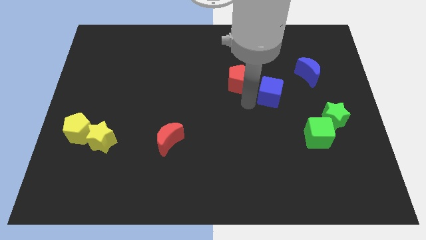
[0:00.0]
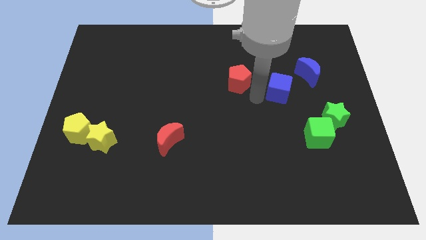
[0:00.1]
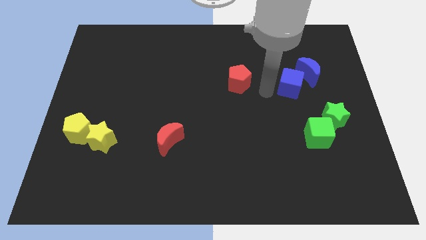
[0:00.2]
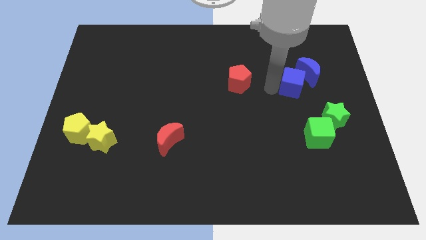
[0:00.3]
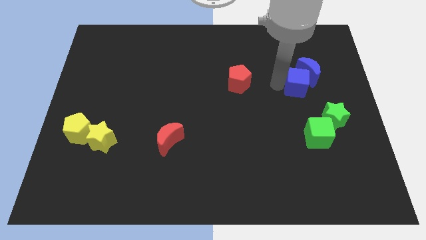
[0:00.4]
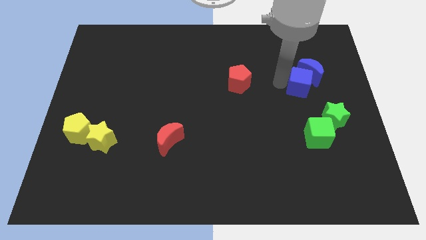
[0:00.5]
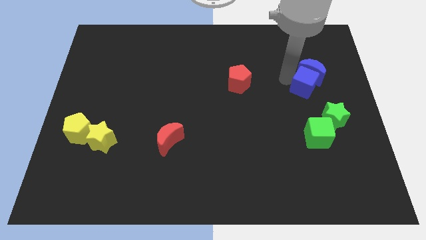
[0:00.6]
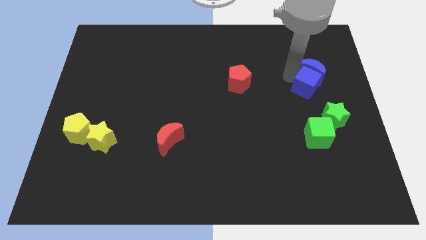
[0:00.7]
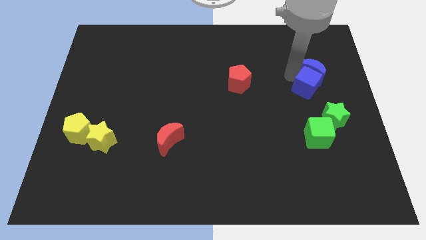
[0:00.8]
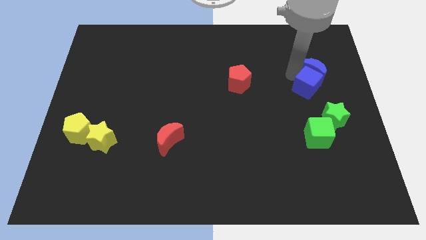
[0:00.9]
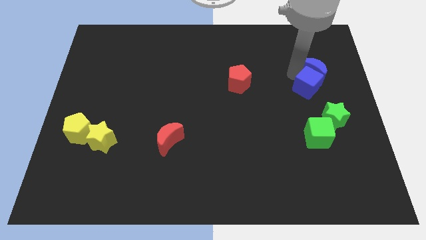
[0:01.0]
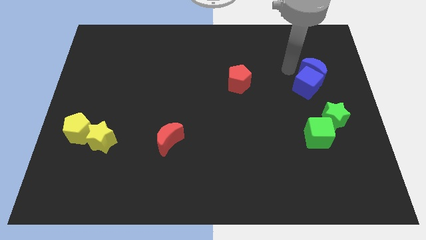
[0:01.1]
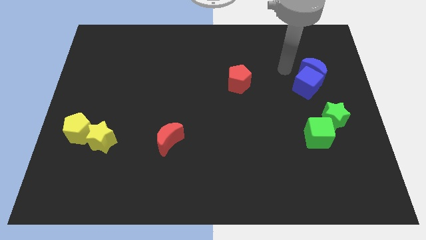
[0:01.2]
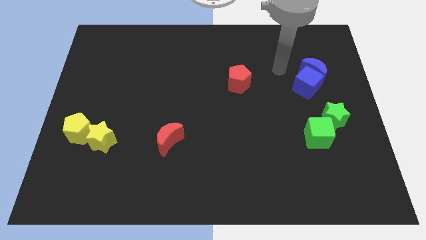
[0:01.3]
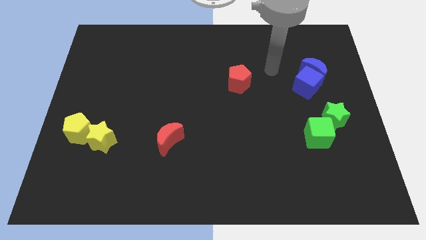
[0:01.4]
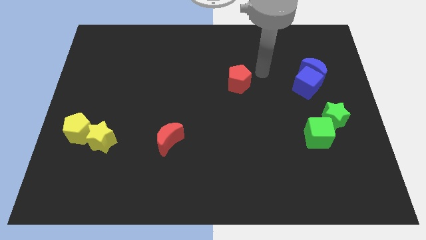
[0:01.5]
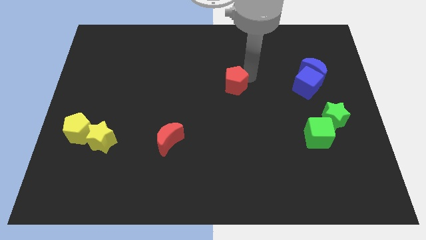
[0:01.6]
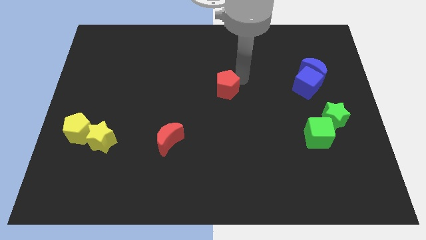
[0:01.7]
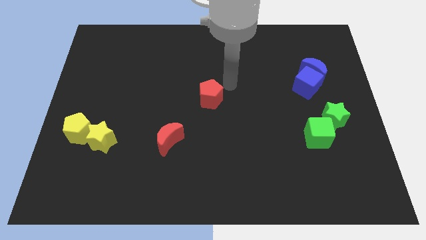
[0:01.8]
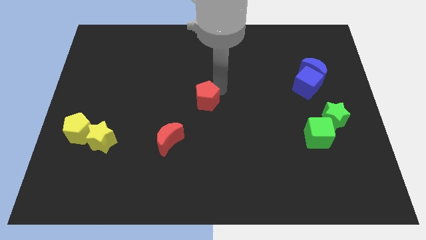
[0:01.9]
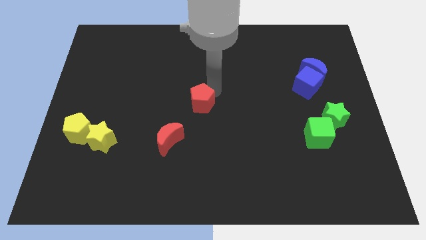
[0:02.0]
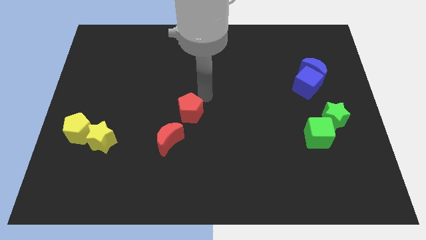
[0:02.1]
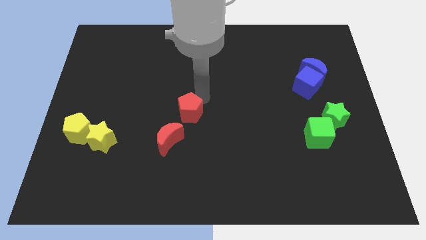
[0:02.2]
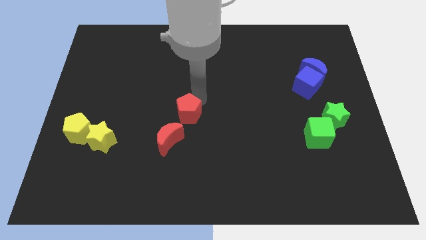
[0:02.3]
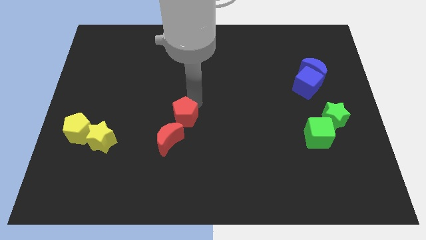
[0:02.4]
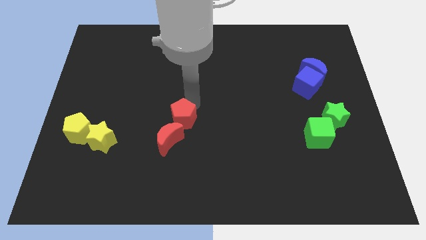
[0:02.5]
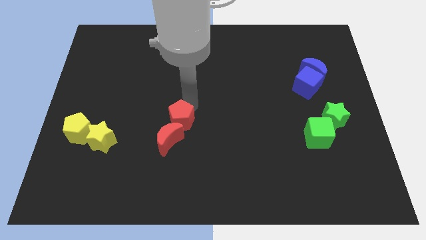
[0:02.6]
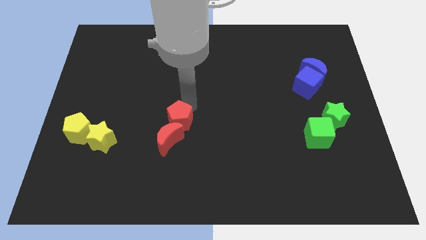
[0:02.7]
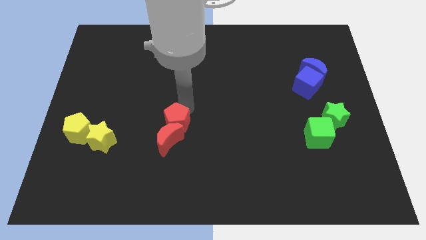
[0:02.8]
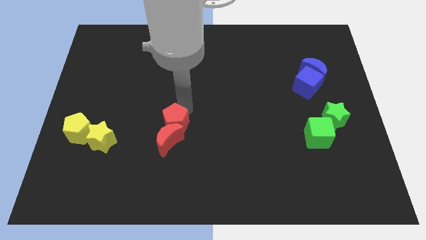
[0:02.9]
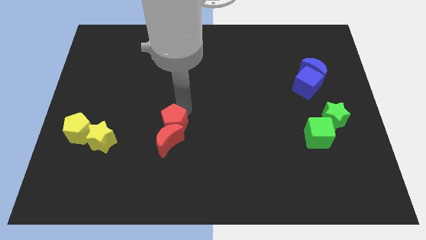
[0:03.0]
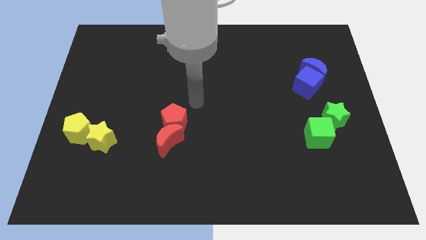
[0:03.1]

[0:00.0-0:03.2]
place the red pentagon to the top of the red moon

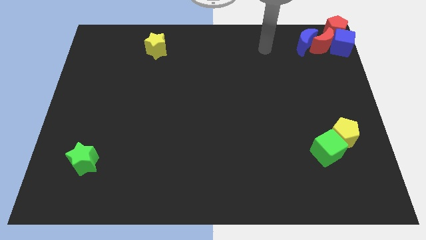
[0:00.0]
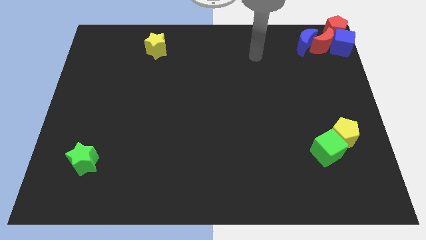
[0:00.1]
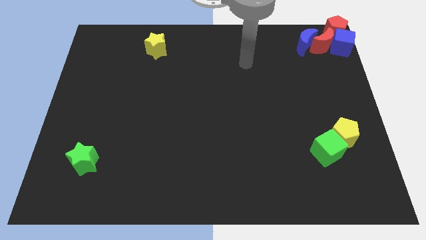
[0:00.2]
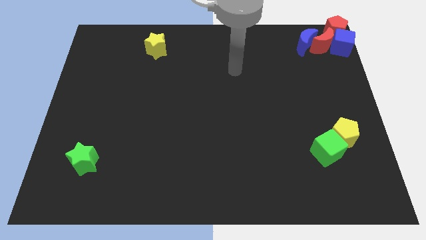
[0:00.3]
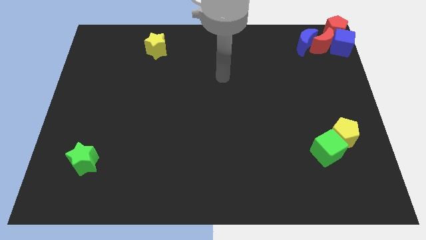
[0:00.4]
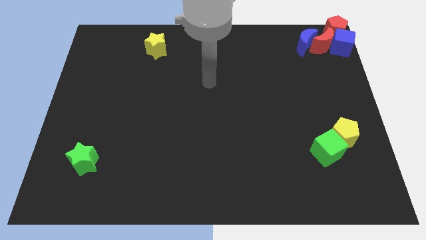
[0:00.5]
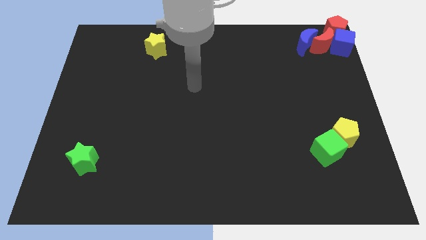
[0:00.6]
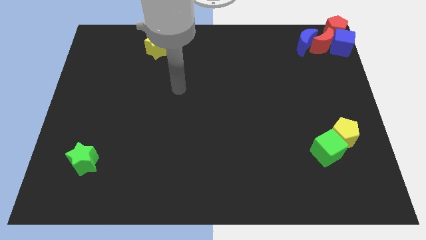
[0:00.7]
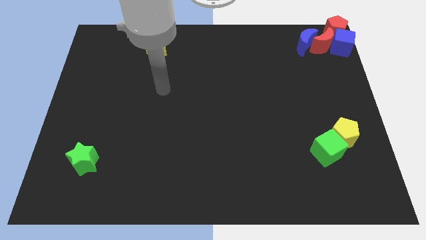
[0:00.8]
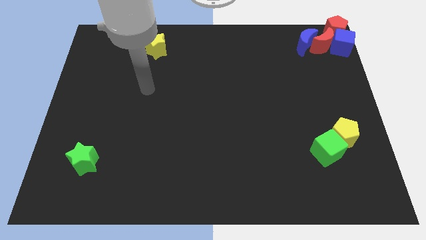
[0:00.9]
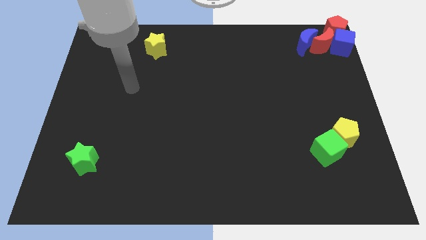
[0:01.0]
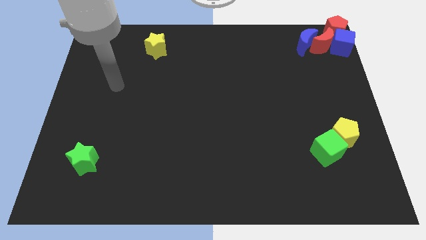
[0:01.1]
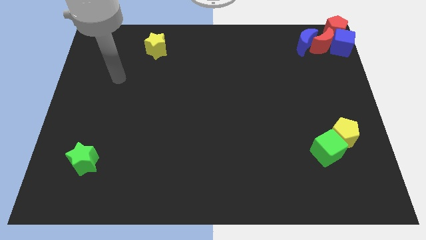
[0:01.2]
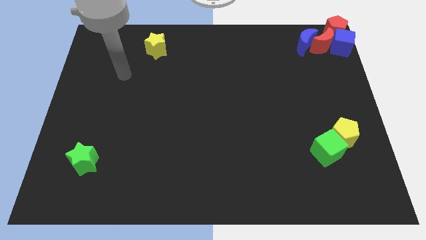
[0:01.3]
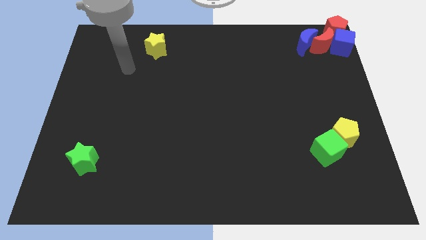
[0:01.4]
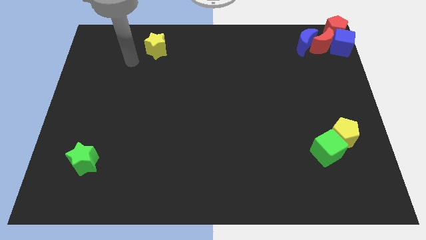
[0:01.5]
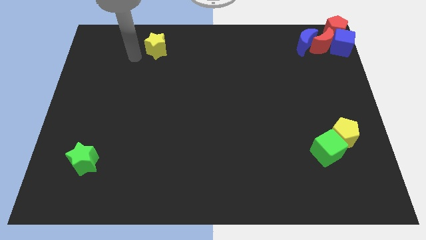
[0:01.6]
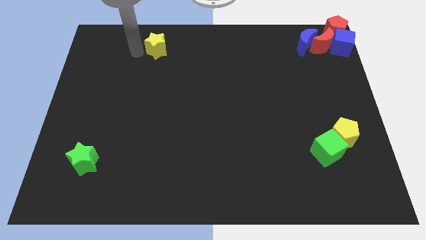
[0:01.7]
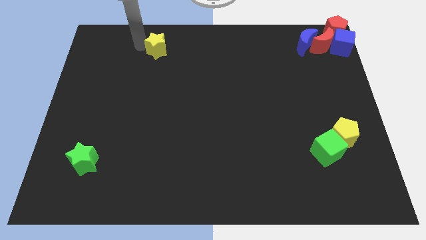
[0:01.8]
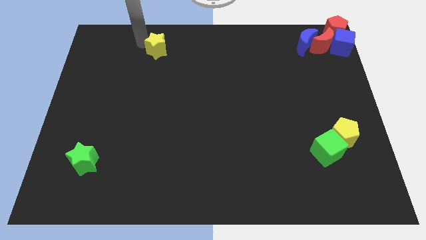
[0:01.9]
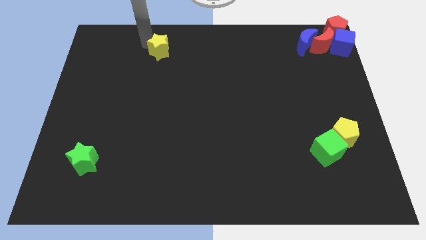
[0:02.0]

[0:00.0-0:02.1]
move the arm towards the yellow star

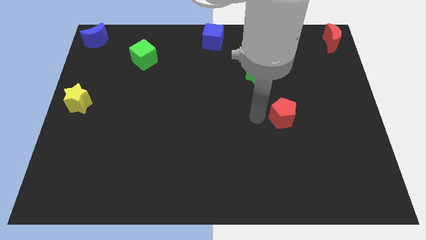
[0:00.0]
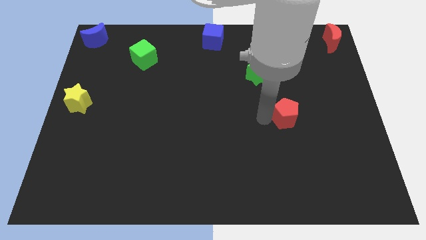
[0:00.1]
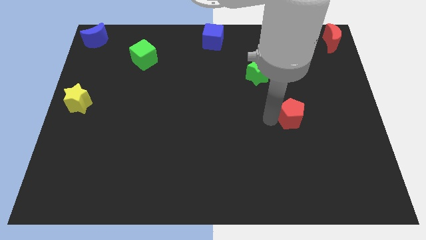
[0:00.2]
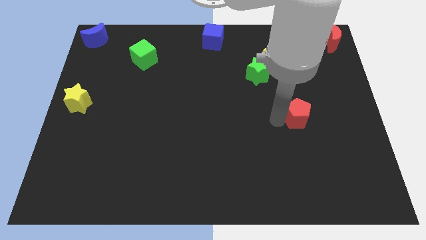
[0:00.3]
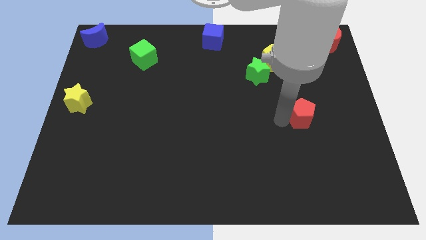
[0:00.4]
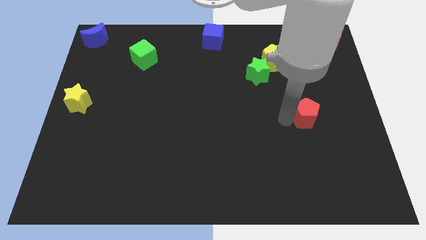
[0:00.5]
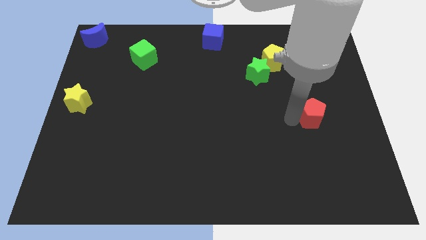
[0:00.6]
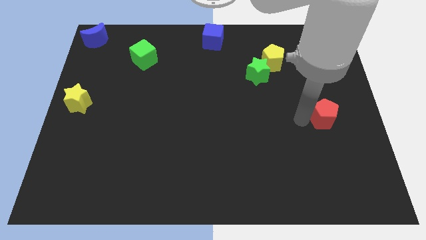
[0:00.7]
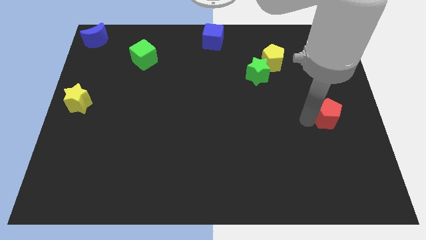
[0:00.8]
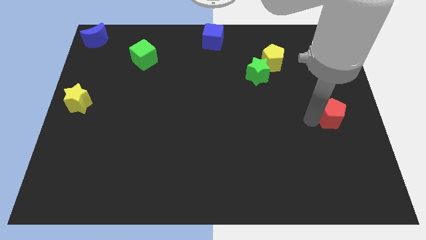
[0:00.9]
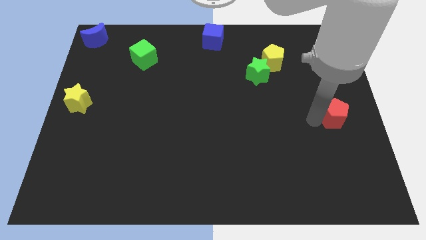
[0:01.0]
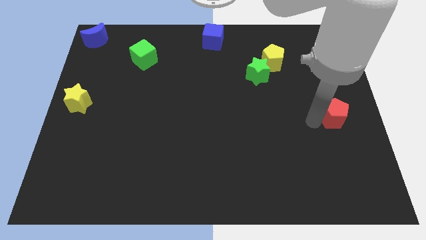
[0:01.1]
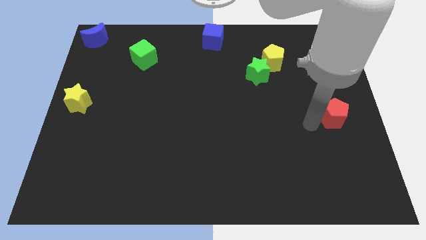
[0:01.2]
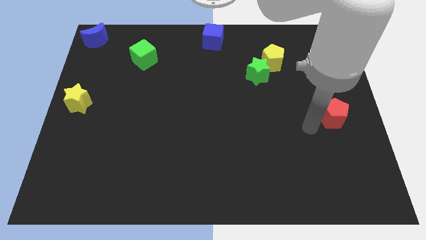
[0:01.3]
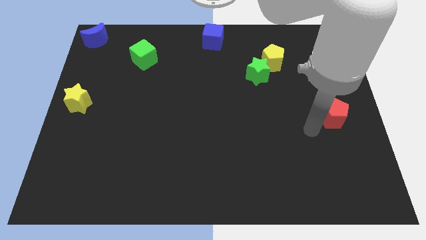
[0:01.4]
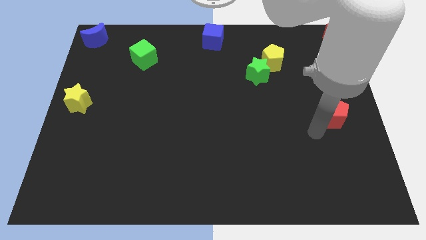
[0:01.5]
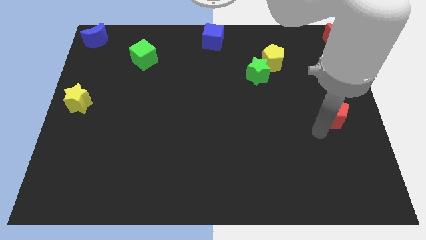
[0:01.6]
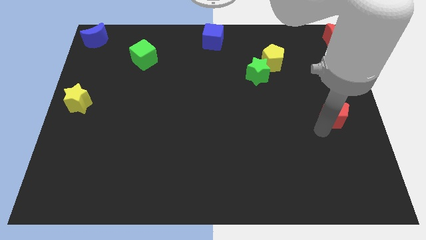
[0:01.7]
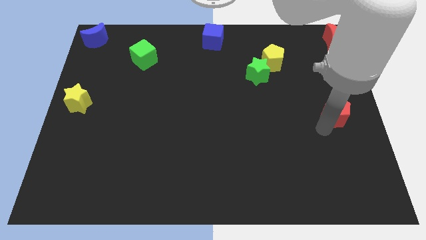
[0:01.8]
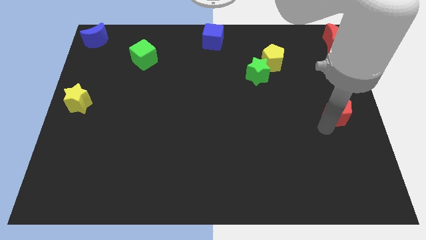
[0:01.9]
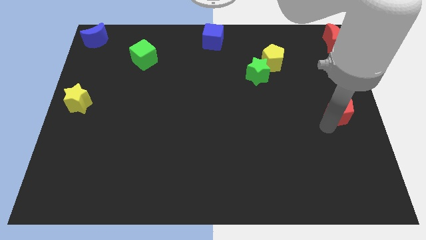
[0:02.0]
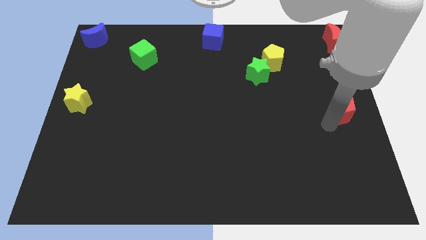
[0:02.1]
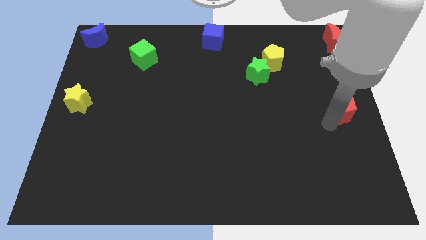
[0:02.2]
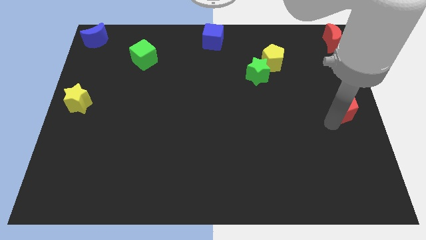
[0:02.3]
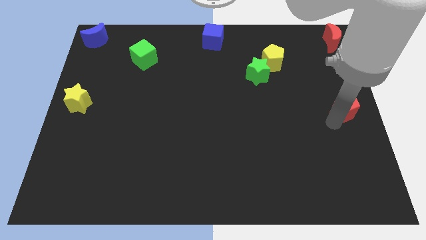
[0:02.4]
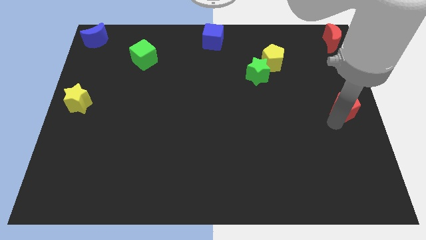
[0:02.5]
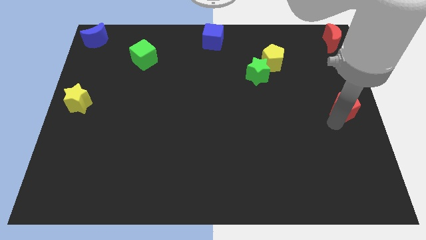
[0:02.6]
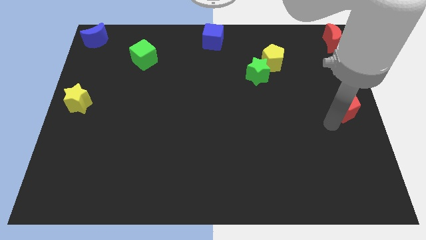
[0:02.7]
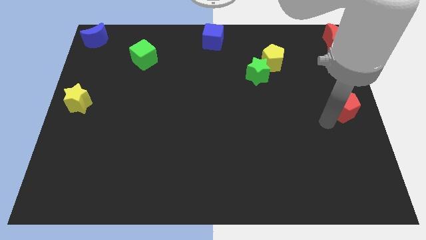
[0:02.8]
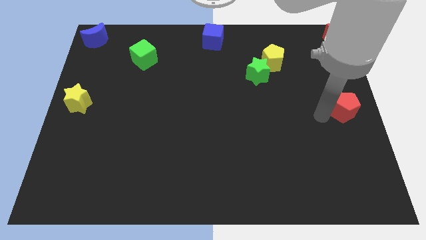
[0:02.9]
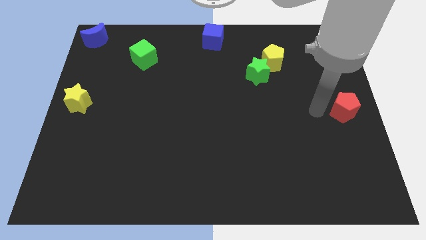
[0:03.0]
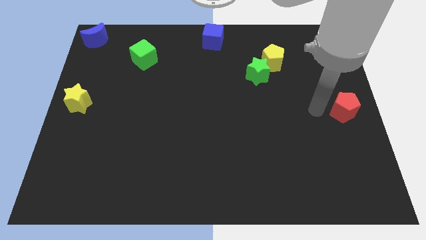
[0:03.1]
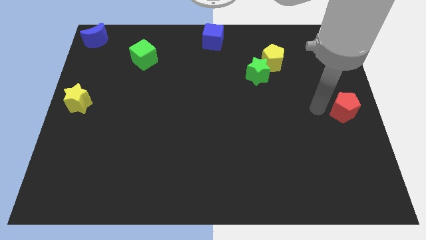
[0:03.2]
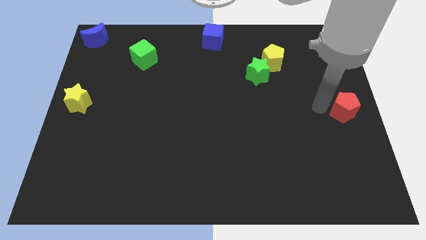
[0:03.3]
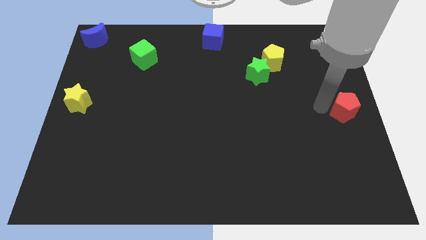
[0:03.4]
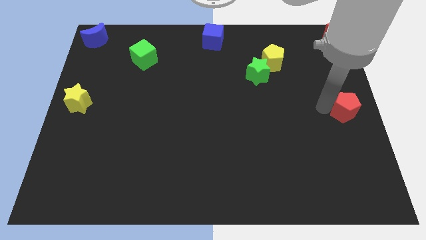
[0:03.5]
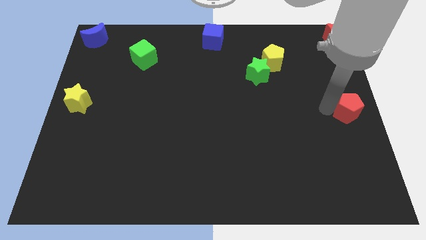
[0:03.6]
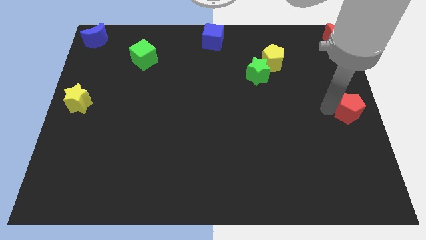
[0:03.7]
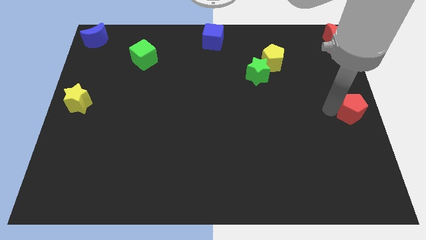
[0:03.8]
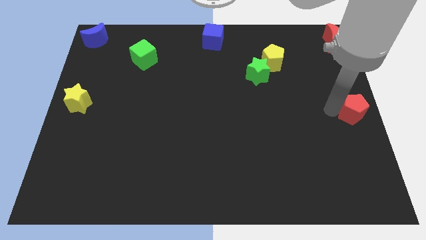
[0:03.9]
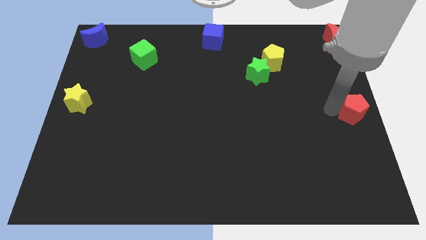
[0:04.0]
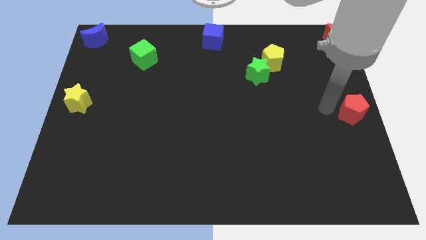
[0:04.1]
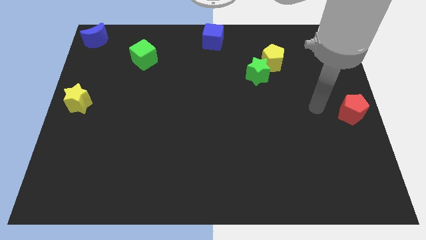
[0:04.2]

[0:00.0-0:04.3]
put the red pentagon vertically at the bottom side of the red crescent
